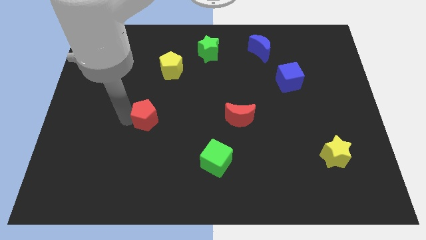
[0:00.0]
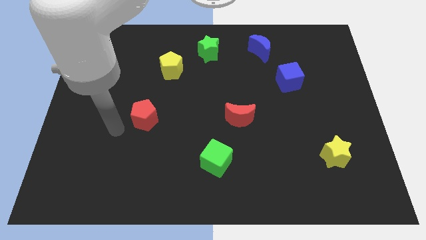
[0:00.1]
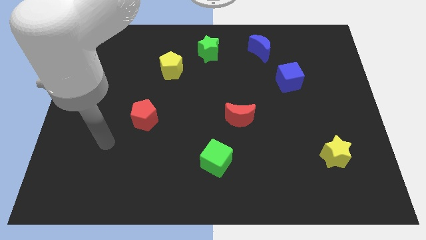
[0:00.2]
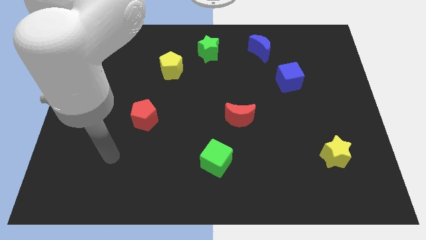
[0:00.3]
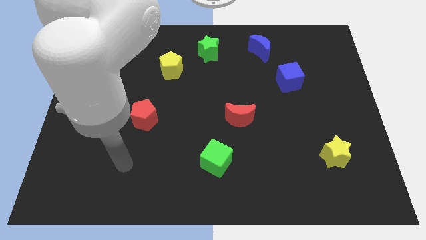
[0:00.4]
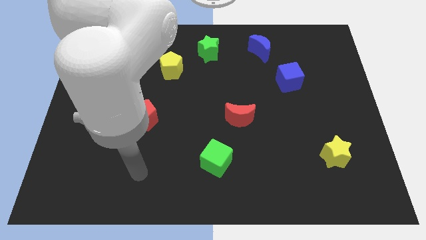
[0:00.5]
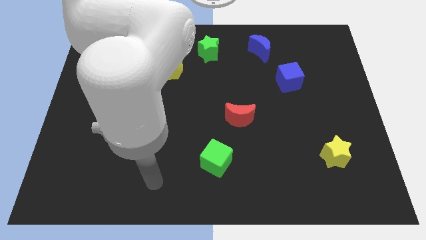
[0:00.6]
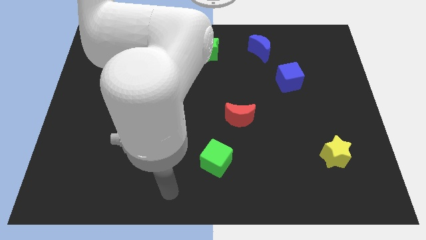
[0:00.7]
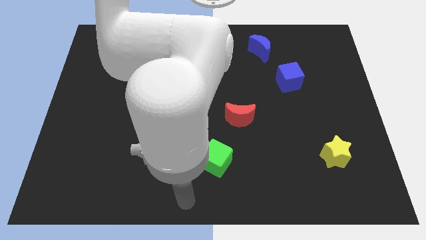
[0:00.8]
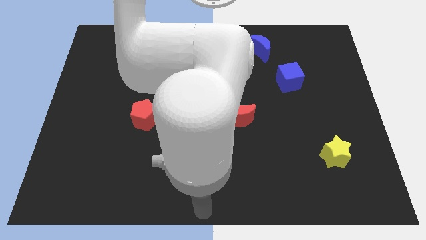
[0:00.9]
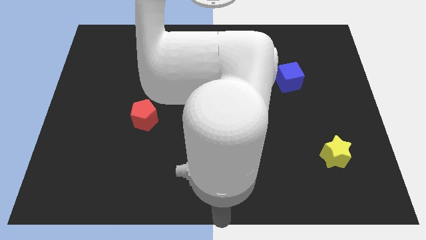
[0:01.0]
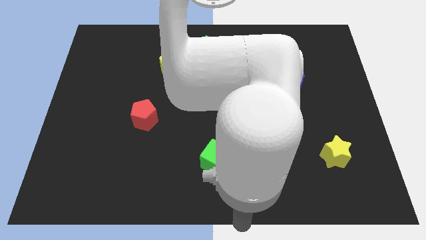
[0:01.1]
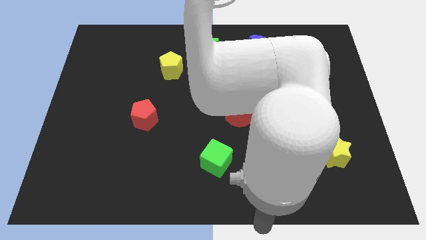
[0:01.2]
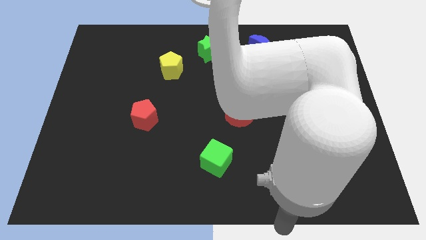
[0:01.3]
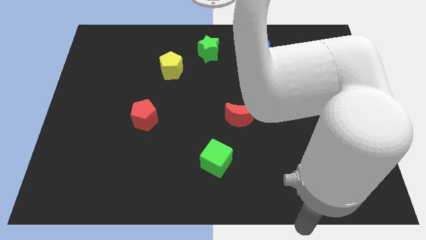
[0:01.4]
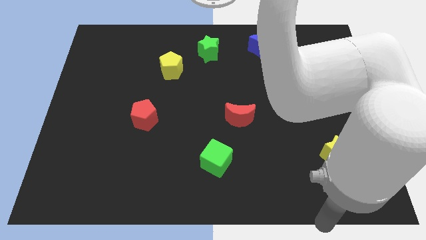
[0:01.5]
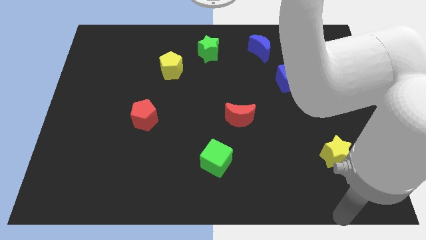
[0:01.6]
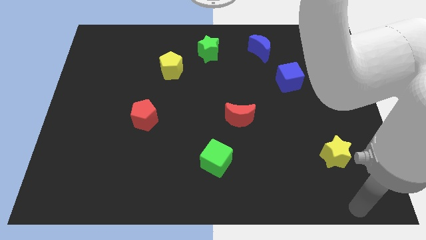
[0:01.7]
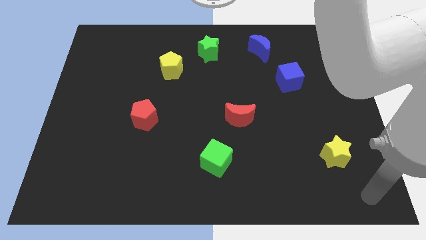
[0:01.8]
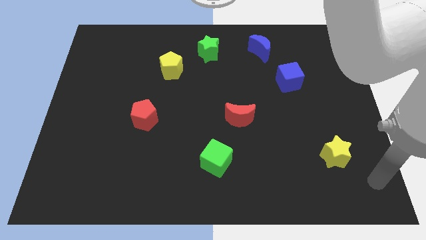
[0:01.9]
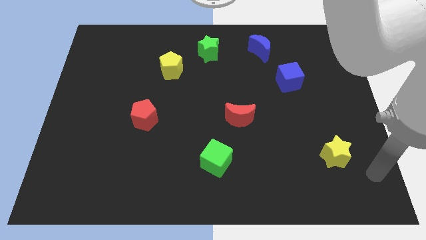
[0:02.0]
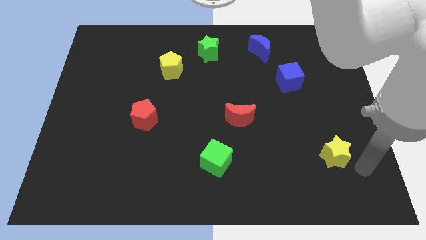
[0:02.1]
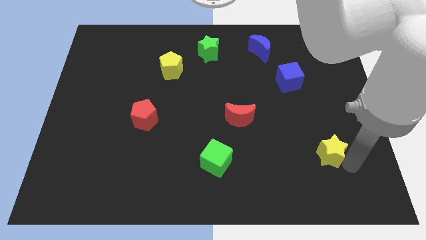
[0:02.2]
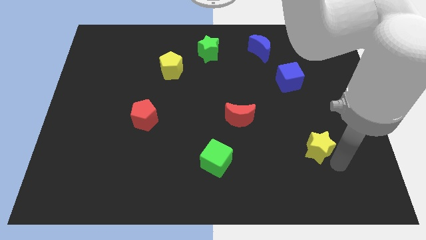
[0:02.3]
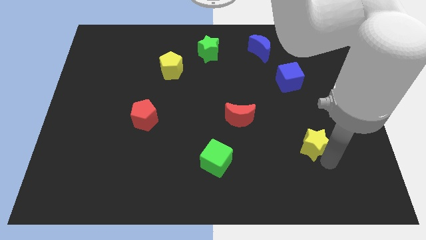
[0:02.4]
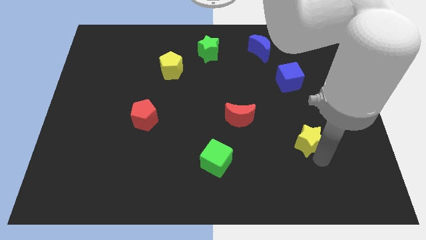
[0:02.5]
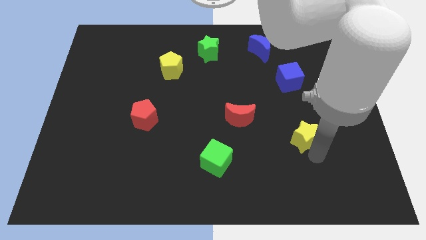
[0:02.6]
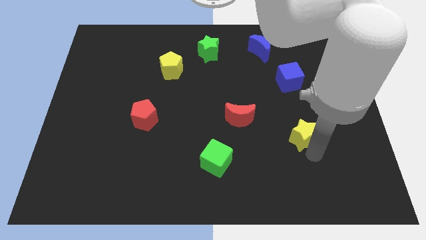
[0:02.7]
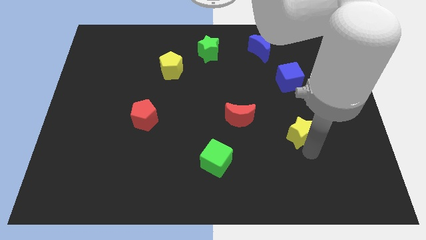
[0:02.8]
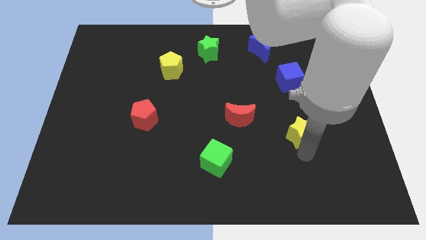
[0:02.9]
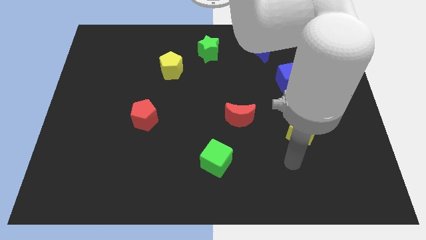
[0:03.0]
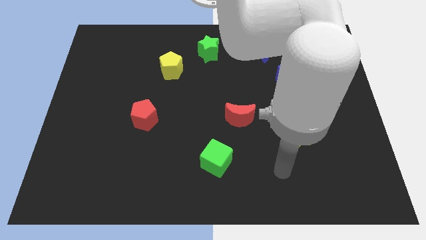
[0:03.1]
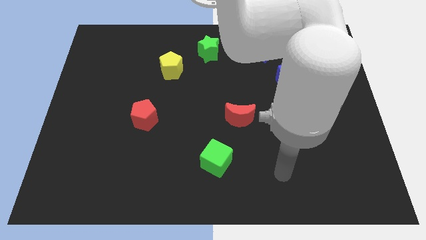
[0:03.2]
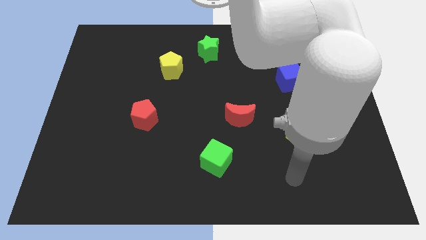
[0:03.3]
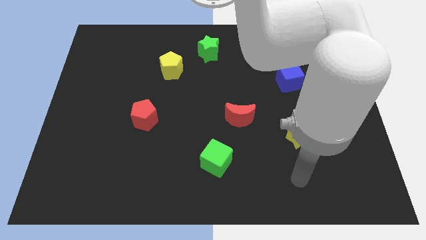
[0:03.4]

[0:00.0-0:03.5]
push the yellow star towards the red moon

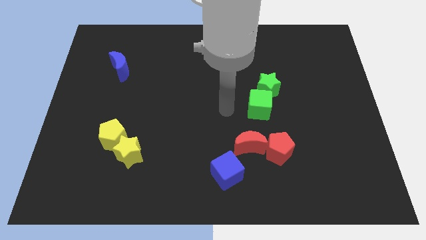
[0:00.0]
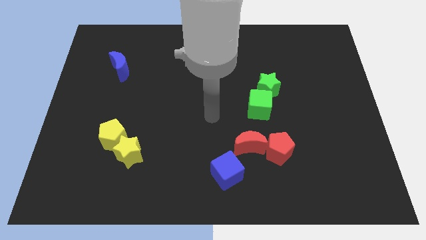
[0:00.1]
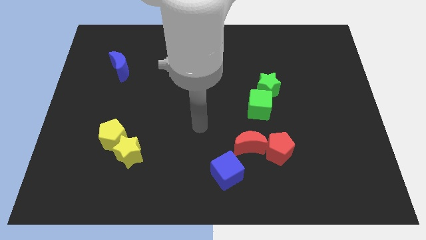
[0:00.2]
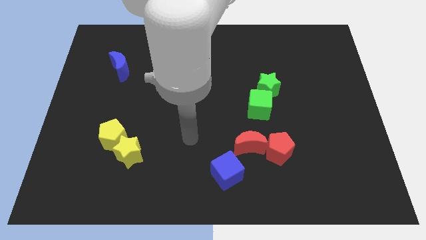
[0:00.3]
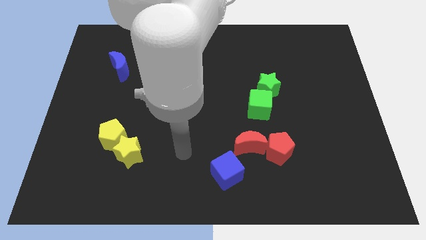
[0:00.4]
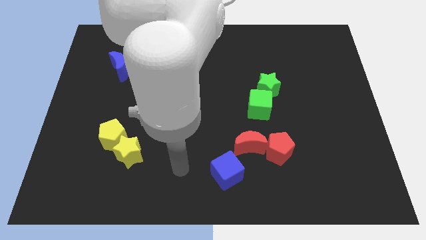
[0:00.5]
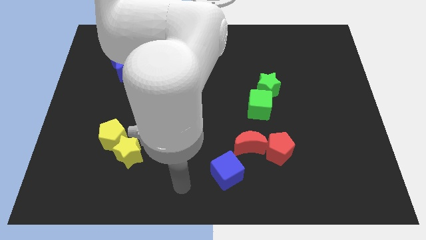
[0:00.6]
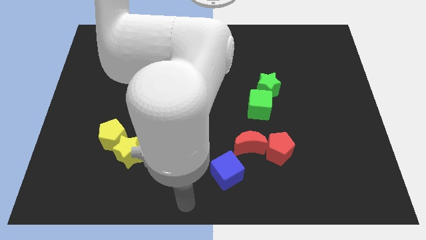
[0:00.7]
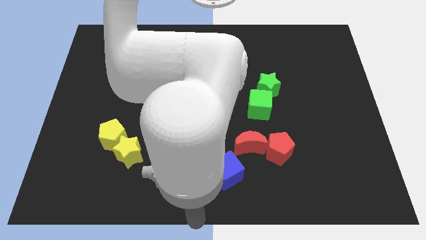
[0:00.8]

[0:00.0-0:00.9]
point the arm at the bottom center of the board

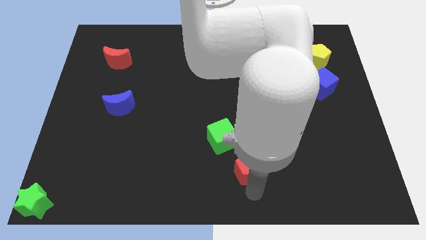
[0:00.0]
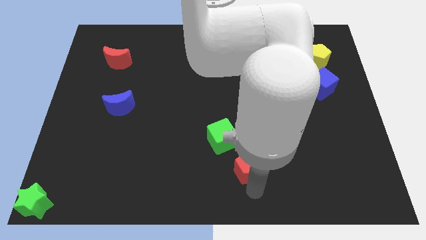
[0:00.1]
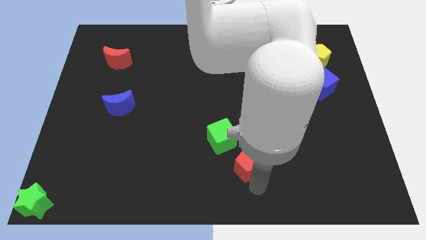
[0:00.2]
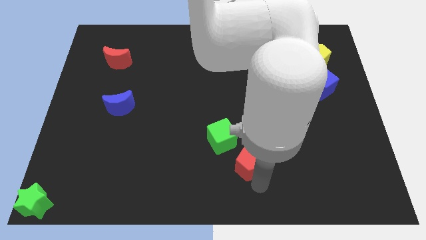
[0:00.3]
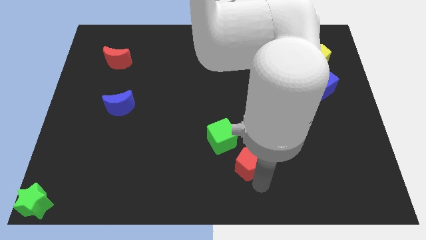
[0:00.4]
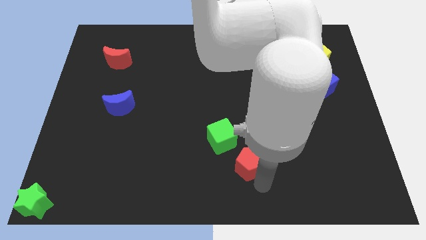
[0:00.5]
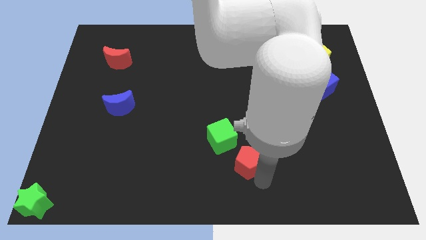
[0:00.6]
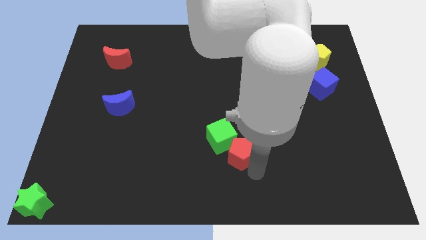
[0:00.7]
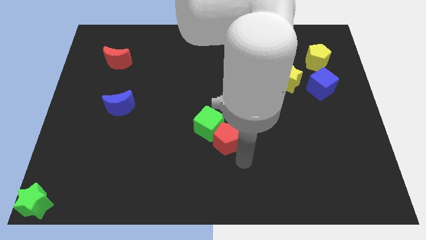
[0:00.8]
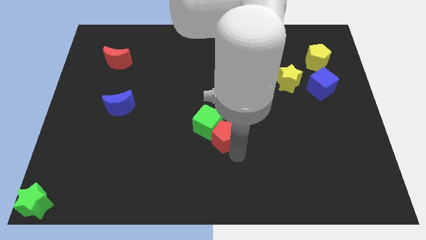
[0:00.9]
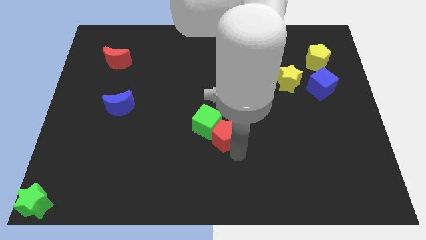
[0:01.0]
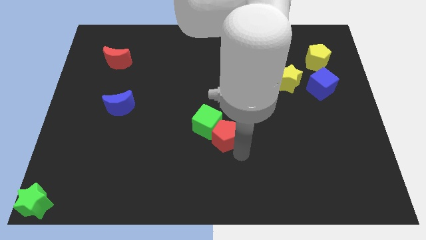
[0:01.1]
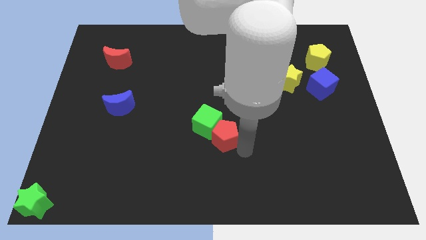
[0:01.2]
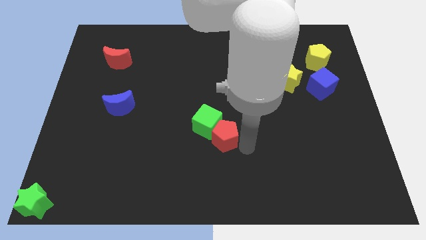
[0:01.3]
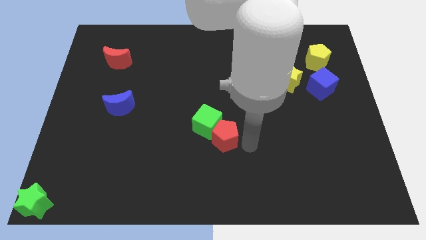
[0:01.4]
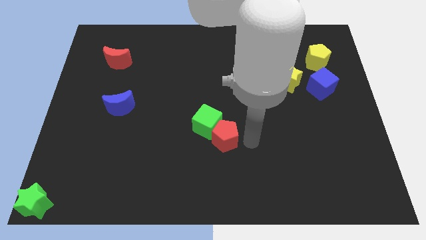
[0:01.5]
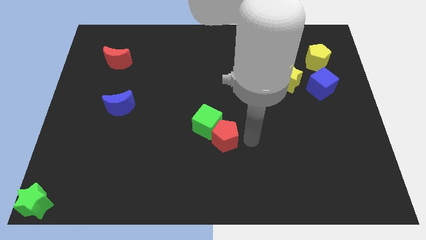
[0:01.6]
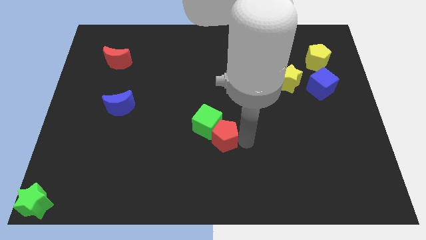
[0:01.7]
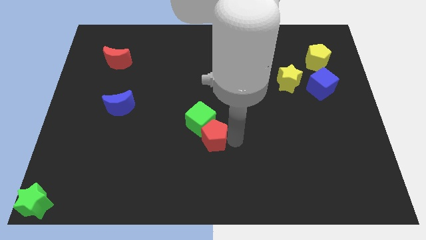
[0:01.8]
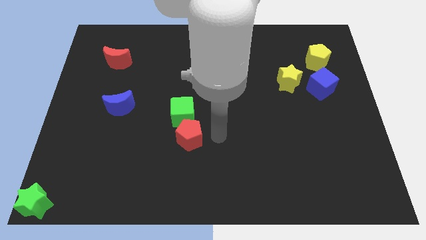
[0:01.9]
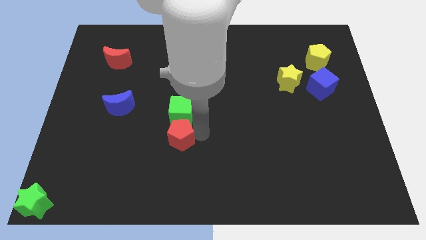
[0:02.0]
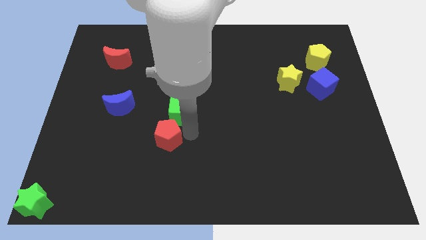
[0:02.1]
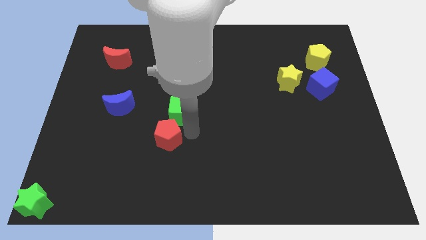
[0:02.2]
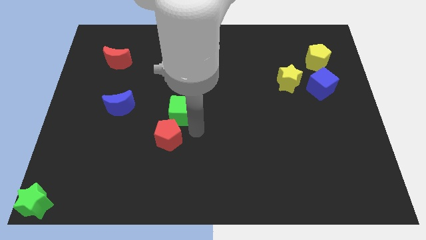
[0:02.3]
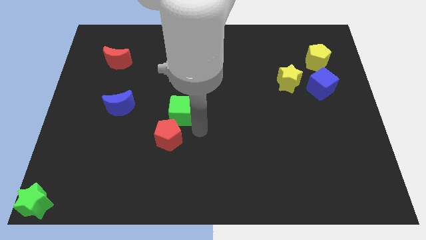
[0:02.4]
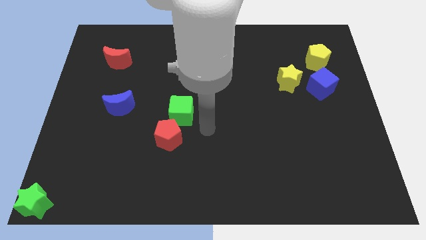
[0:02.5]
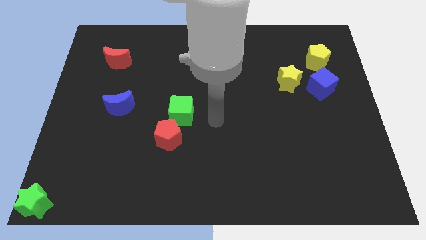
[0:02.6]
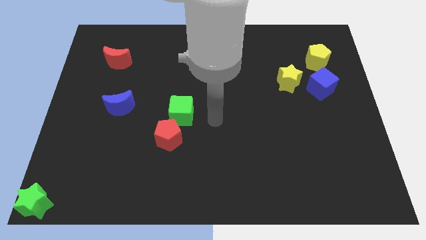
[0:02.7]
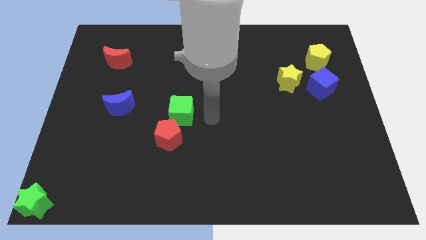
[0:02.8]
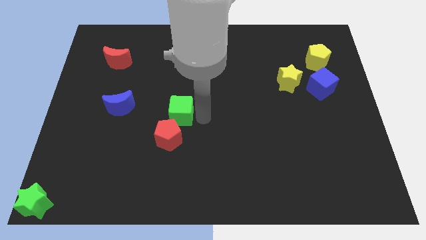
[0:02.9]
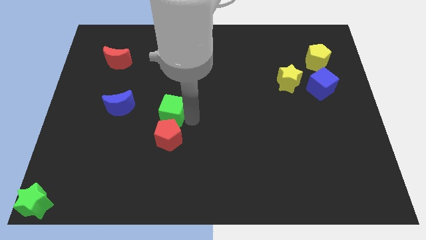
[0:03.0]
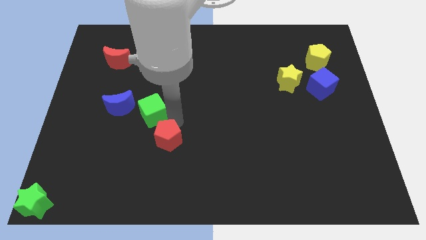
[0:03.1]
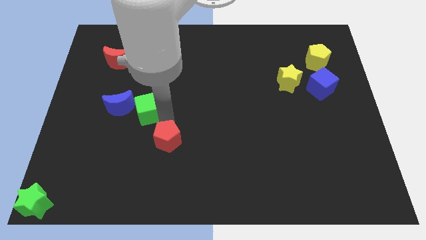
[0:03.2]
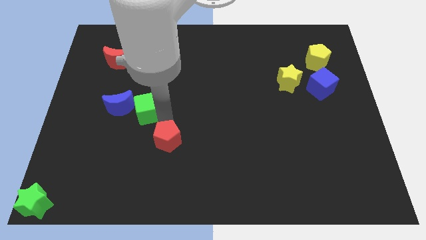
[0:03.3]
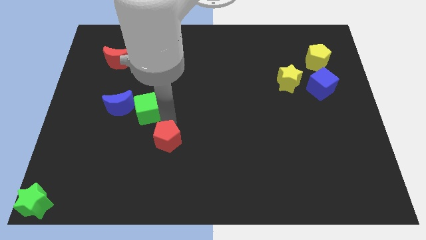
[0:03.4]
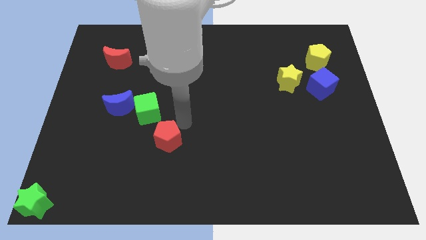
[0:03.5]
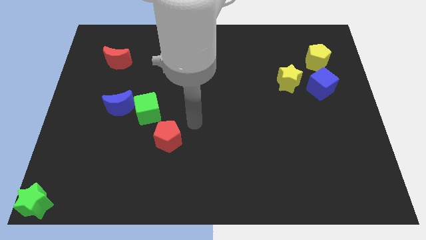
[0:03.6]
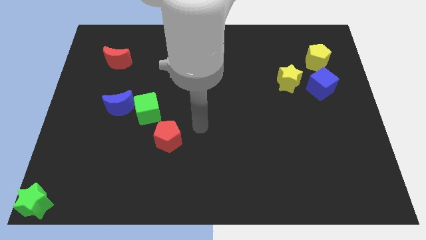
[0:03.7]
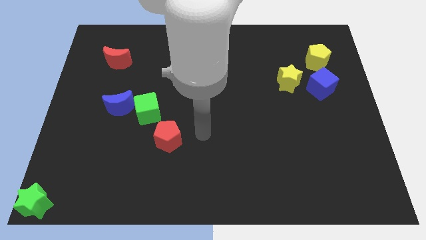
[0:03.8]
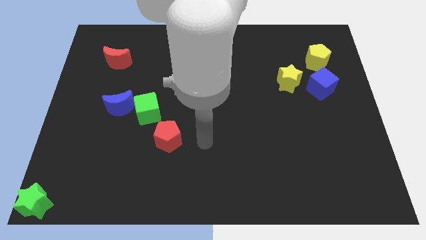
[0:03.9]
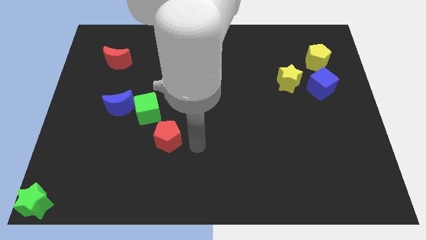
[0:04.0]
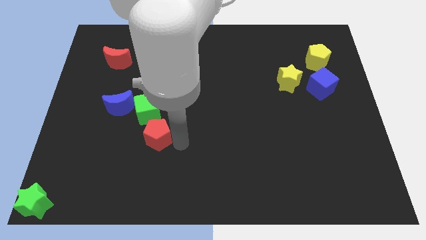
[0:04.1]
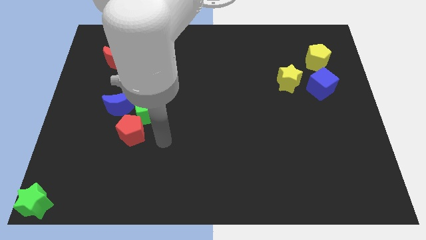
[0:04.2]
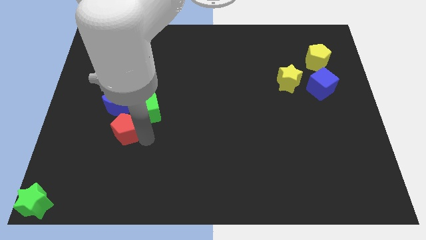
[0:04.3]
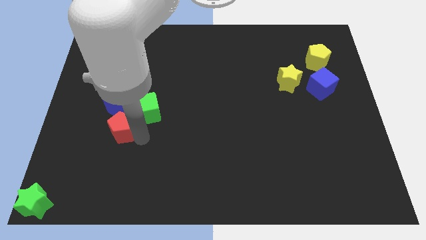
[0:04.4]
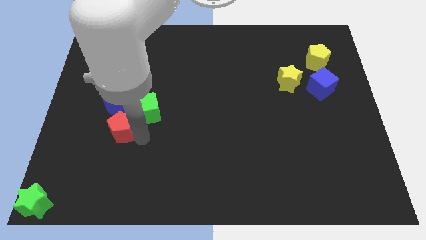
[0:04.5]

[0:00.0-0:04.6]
move the red pentagon below the blue moon
